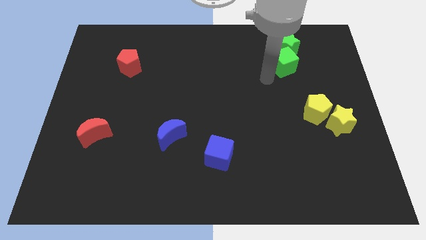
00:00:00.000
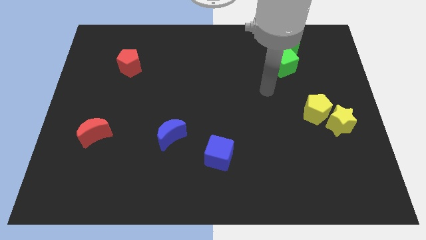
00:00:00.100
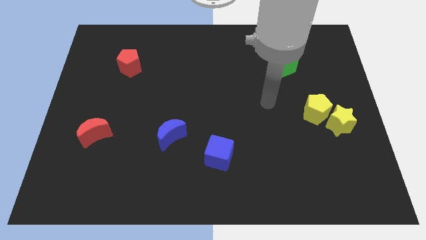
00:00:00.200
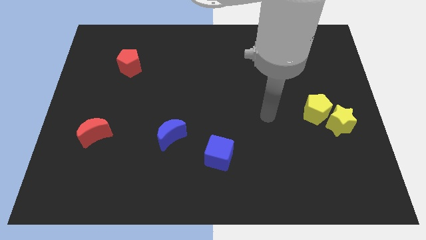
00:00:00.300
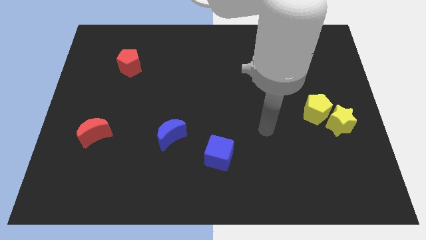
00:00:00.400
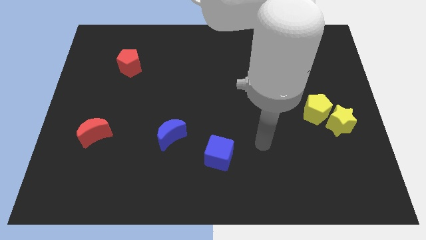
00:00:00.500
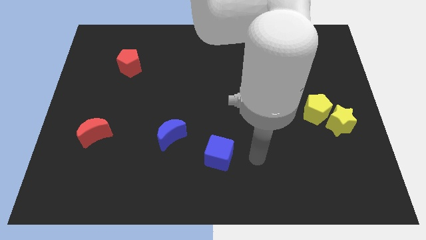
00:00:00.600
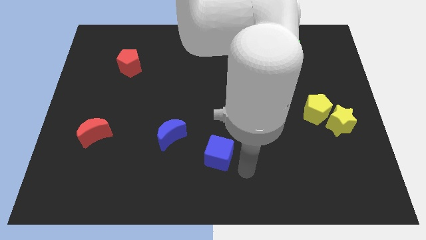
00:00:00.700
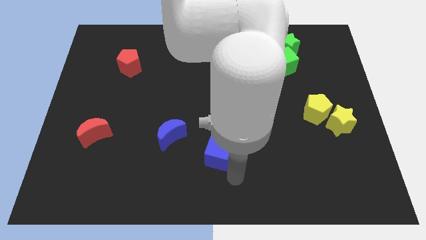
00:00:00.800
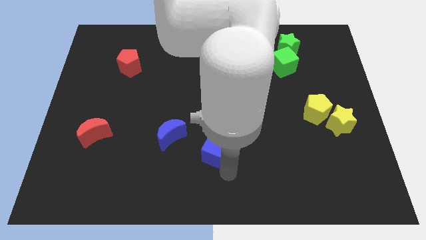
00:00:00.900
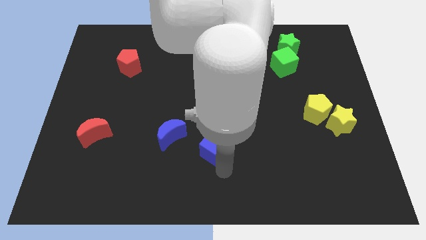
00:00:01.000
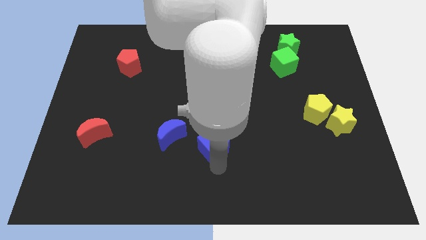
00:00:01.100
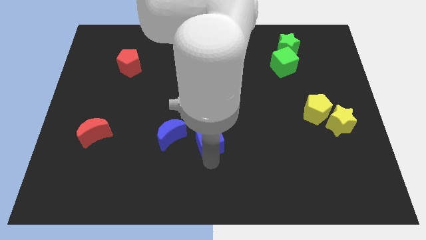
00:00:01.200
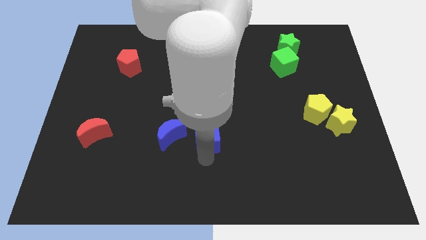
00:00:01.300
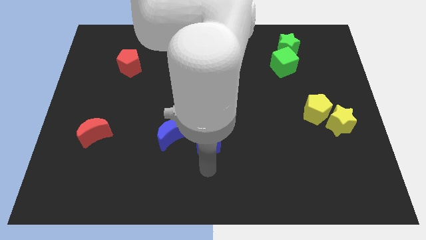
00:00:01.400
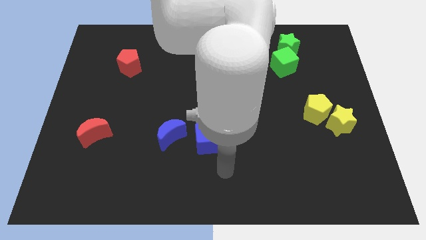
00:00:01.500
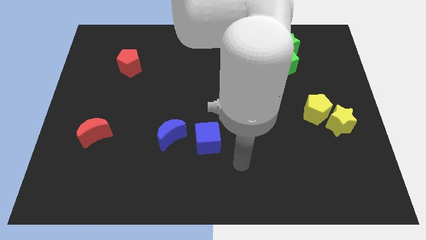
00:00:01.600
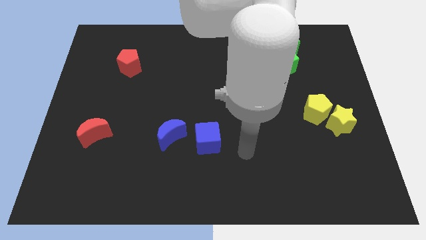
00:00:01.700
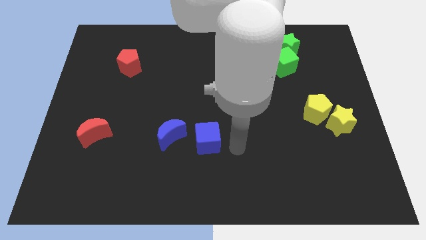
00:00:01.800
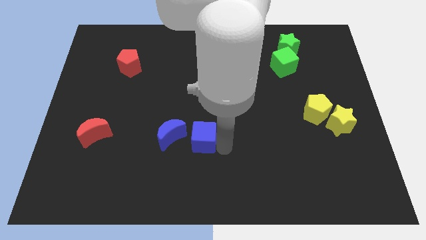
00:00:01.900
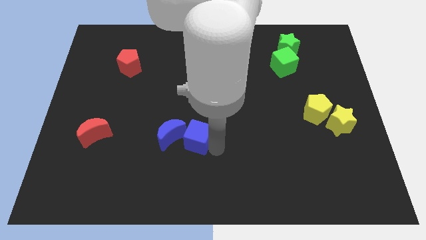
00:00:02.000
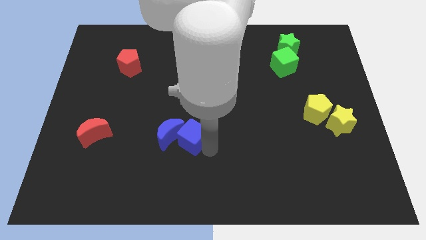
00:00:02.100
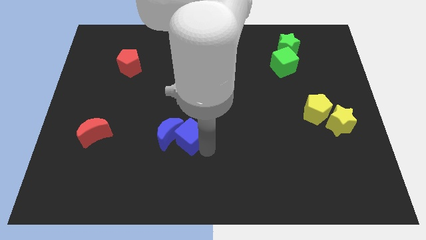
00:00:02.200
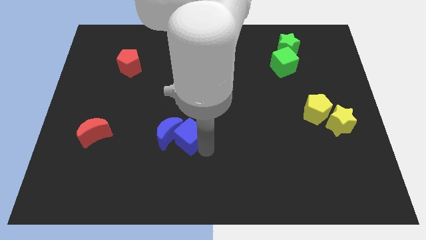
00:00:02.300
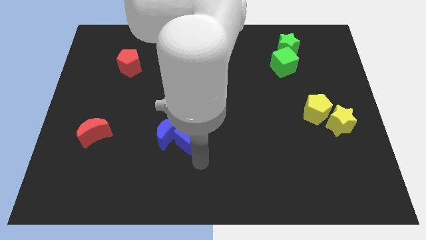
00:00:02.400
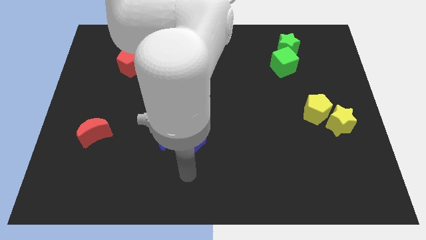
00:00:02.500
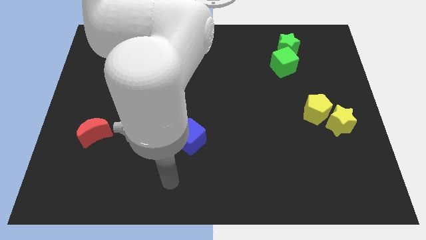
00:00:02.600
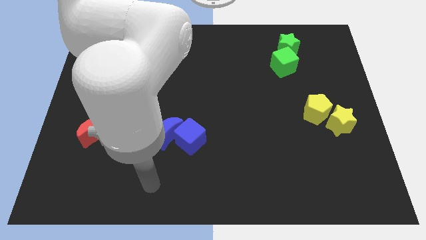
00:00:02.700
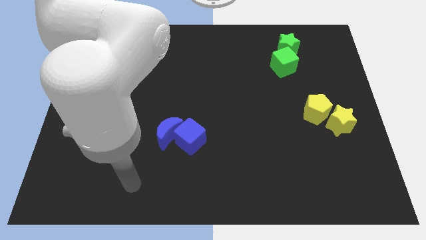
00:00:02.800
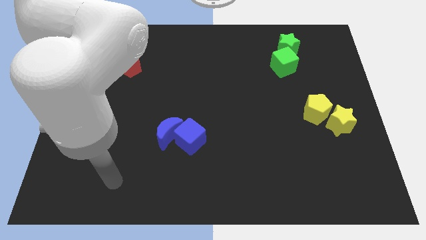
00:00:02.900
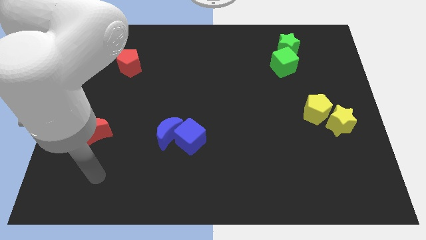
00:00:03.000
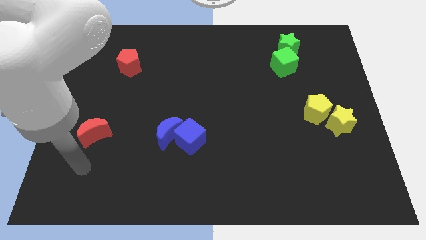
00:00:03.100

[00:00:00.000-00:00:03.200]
move the blue cube into the blue moon

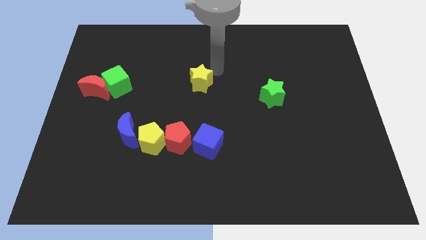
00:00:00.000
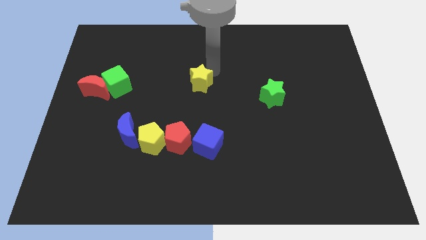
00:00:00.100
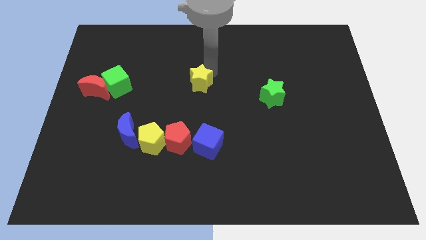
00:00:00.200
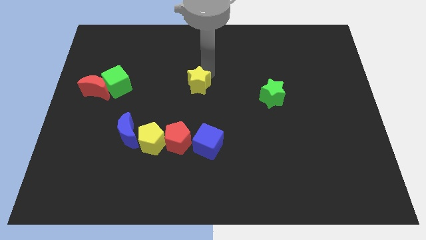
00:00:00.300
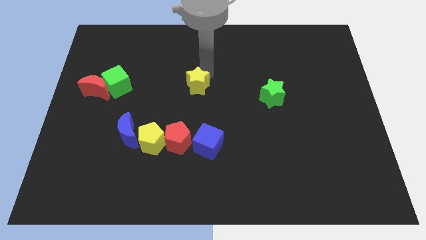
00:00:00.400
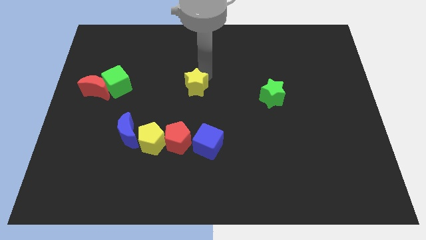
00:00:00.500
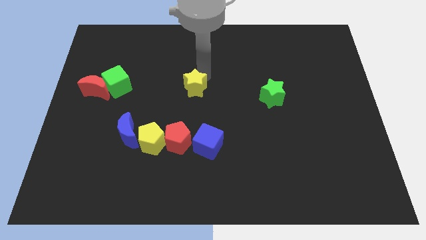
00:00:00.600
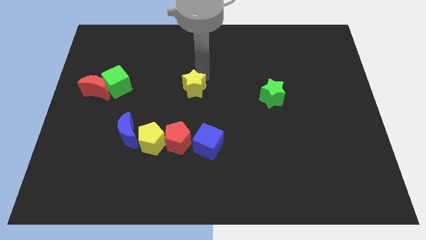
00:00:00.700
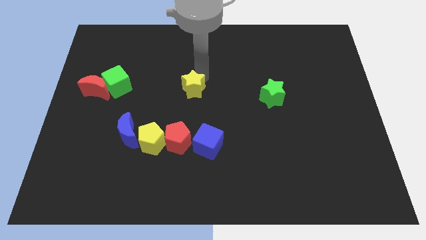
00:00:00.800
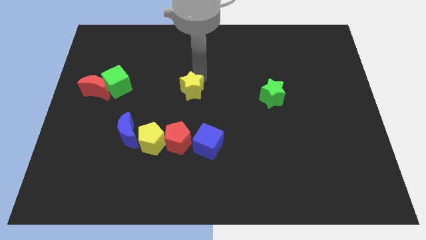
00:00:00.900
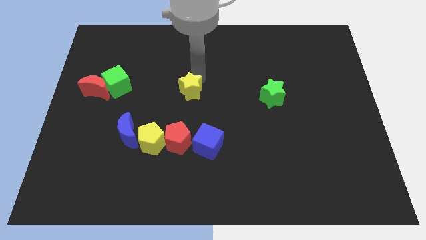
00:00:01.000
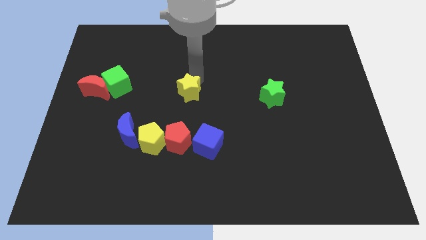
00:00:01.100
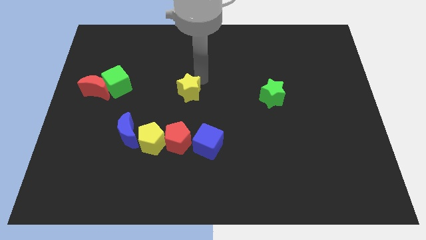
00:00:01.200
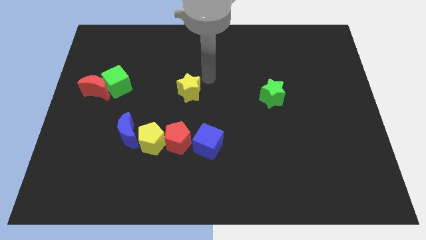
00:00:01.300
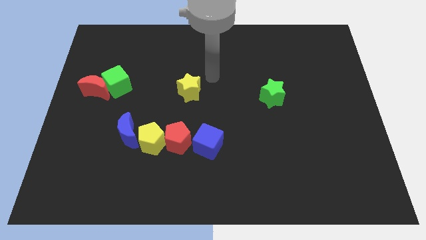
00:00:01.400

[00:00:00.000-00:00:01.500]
move the yellow star diagonal to the left of the green star

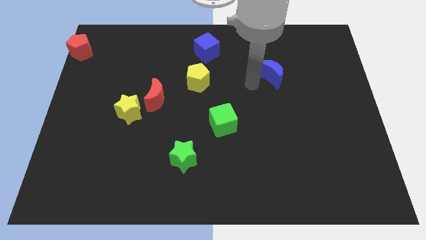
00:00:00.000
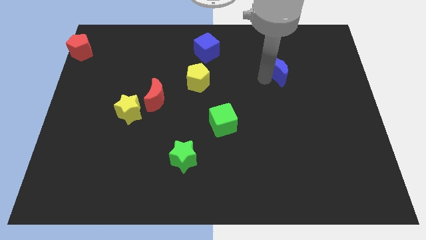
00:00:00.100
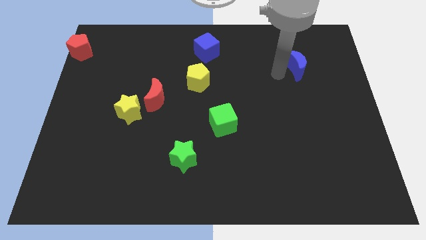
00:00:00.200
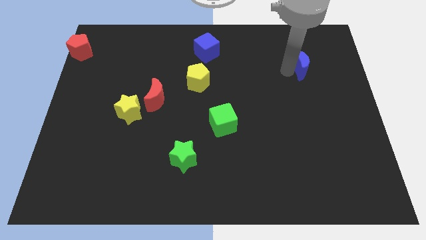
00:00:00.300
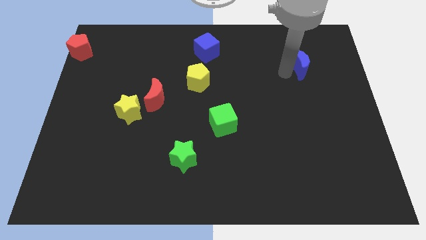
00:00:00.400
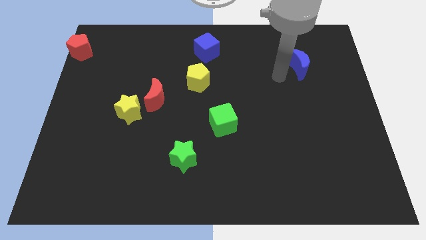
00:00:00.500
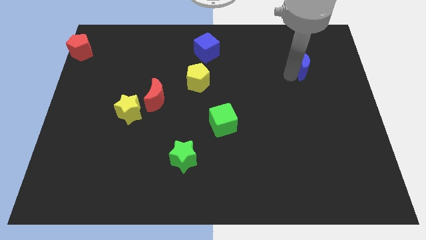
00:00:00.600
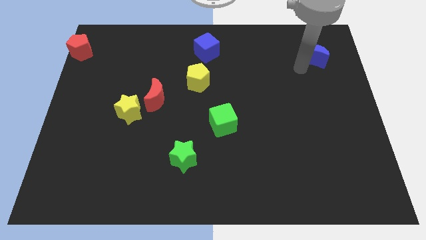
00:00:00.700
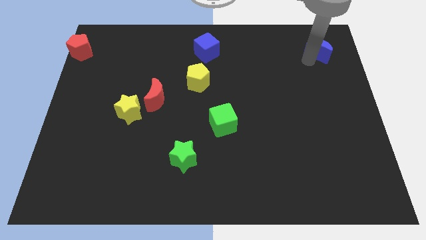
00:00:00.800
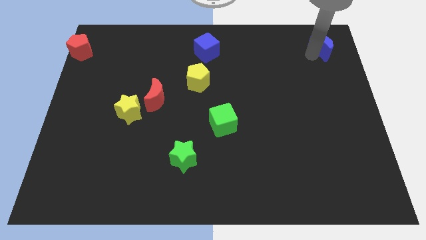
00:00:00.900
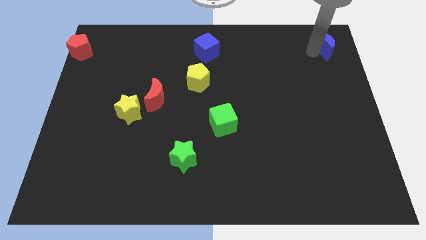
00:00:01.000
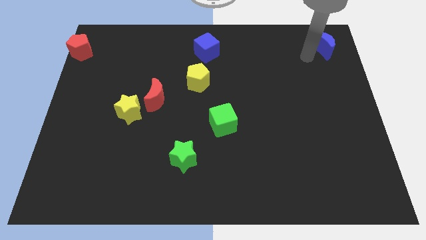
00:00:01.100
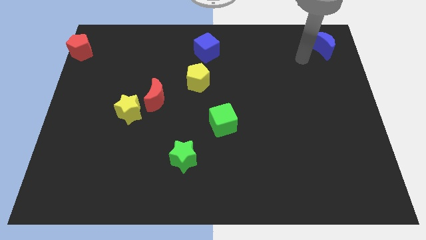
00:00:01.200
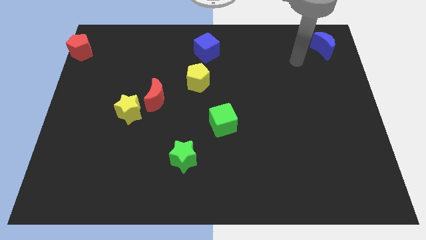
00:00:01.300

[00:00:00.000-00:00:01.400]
move the blue crescent to the top right corner

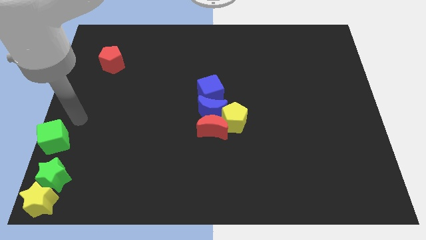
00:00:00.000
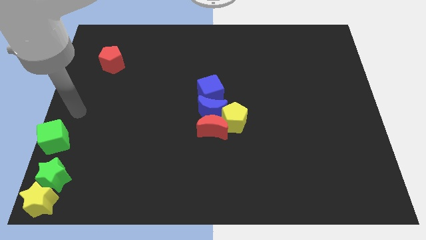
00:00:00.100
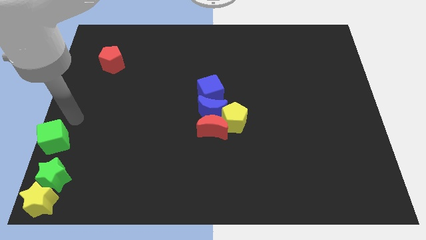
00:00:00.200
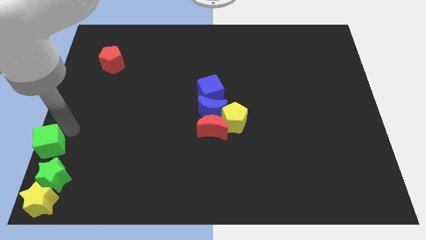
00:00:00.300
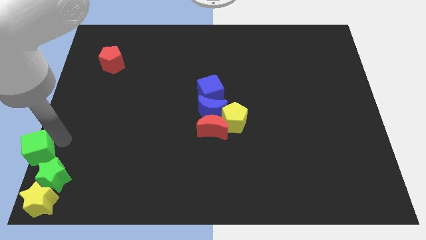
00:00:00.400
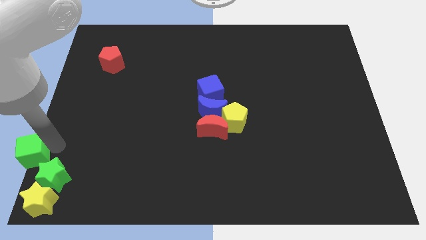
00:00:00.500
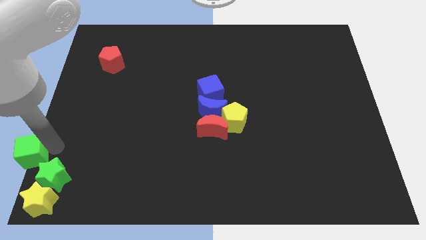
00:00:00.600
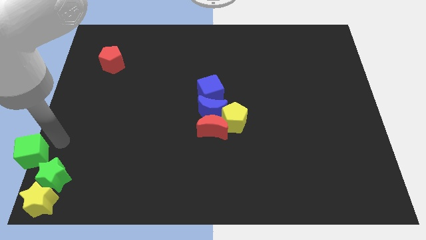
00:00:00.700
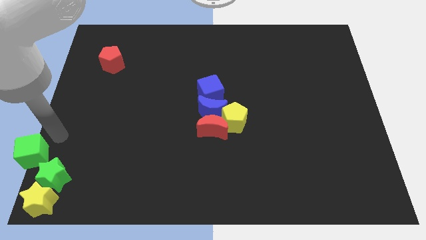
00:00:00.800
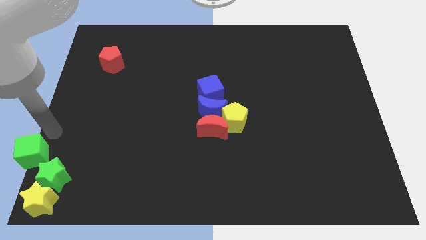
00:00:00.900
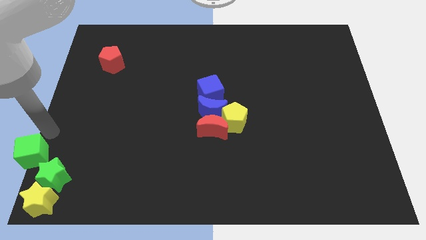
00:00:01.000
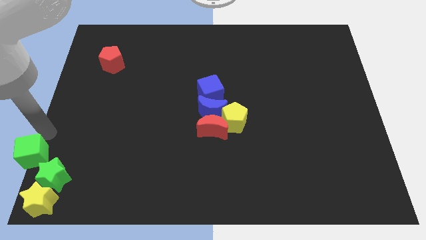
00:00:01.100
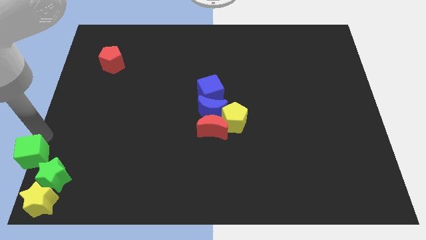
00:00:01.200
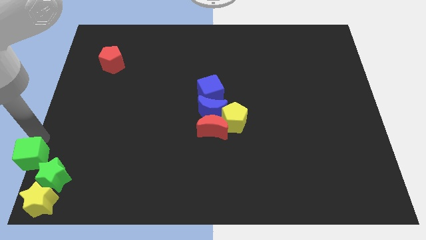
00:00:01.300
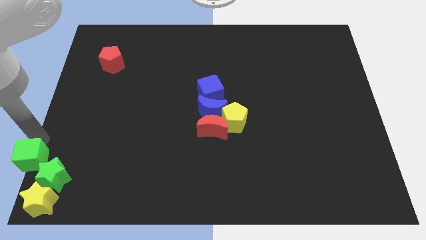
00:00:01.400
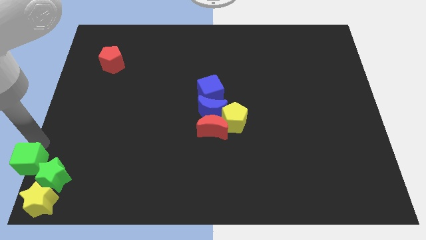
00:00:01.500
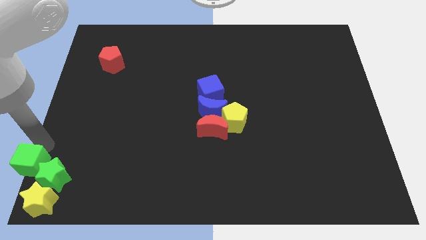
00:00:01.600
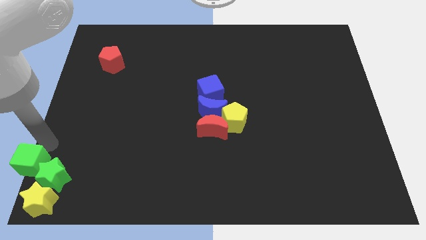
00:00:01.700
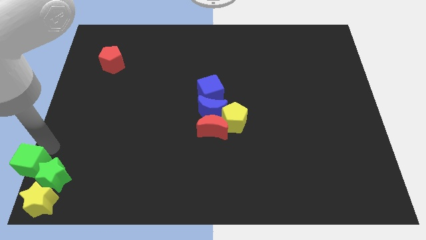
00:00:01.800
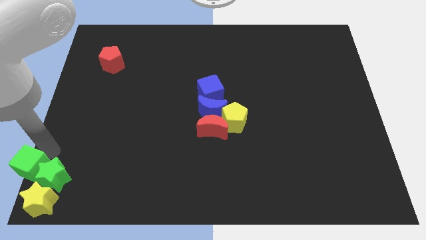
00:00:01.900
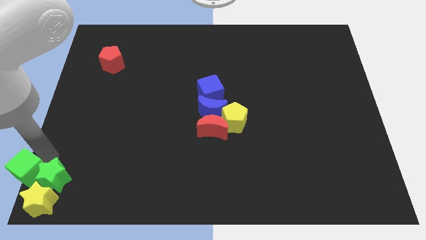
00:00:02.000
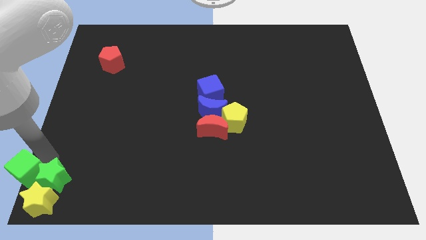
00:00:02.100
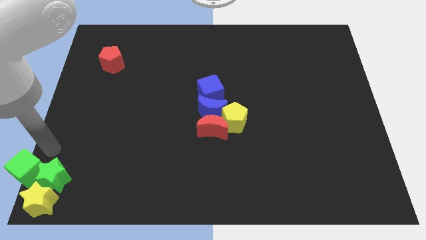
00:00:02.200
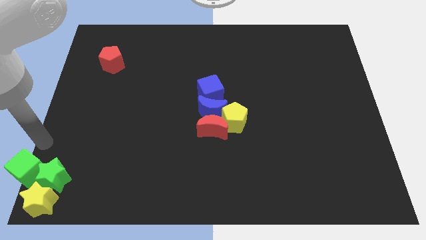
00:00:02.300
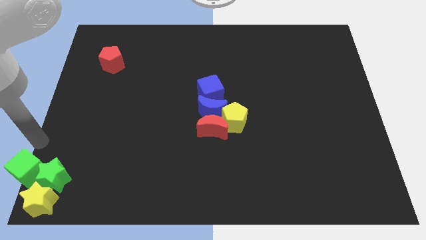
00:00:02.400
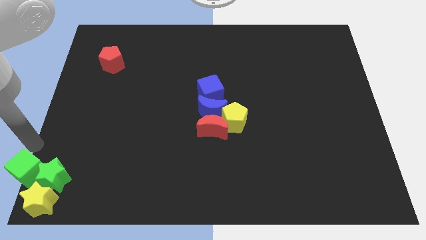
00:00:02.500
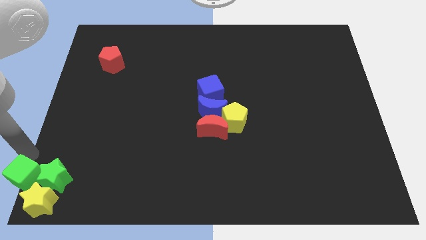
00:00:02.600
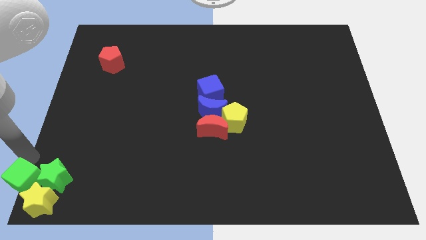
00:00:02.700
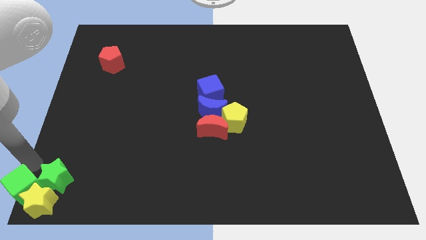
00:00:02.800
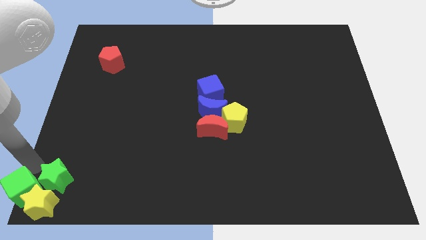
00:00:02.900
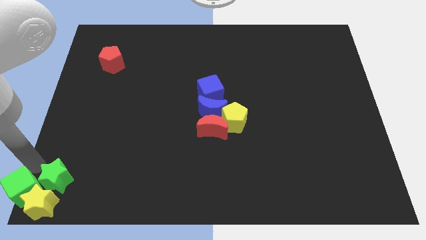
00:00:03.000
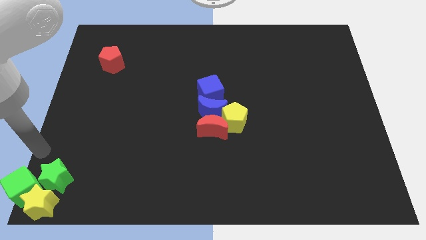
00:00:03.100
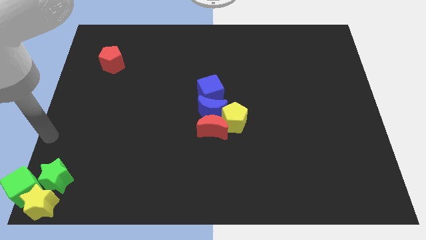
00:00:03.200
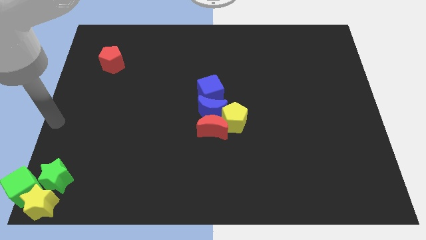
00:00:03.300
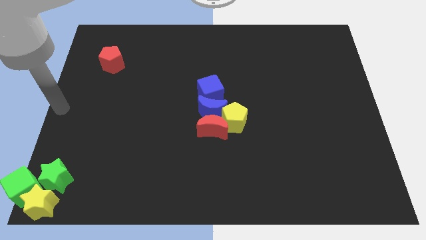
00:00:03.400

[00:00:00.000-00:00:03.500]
place the green cube into yellow and green star at corner left
